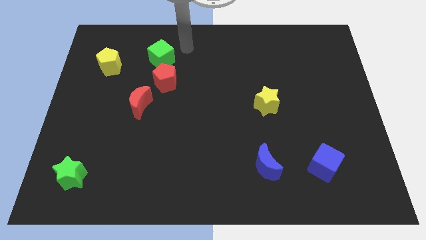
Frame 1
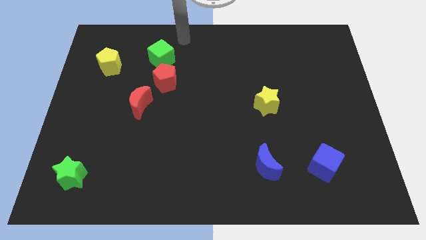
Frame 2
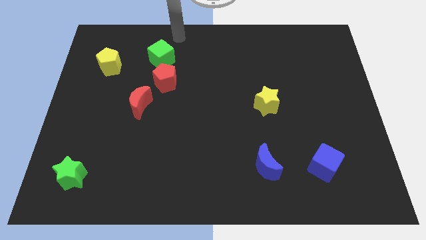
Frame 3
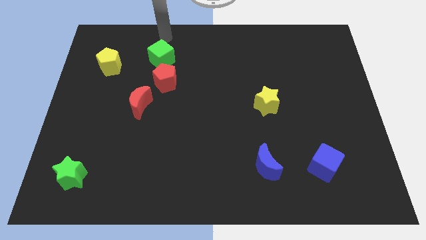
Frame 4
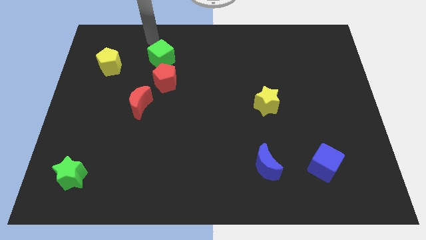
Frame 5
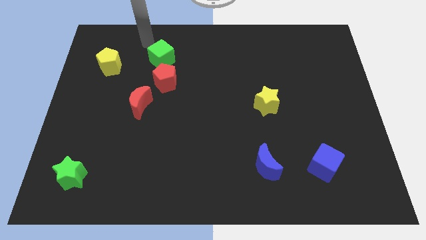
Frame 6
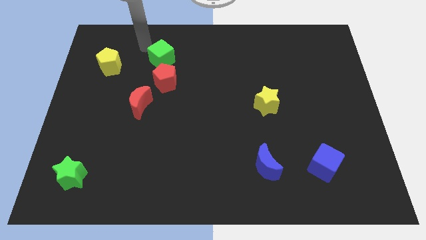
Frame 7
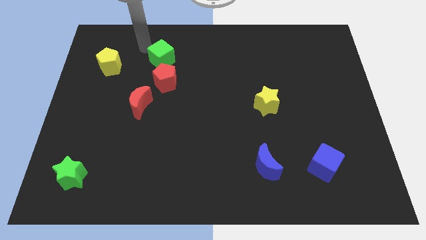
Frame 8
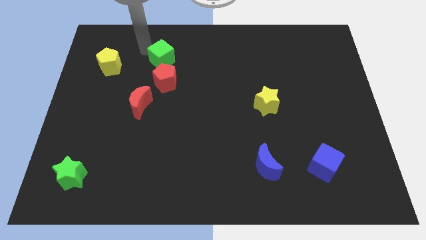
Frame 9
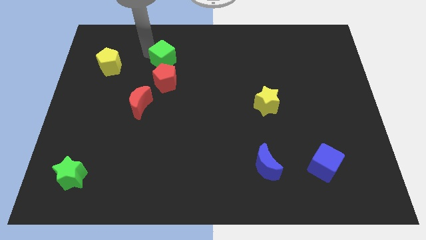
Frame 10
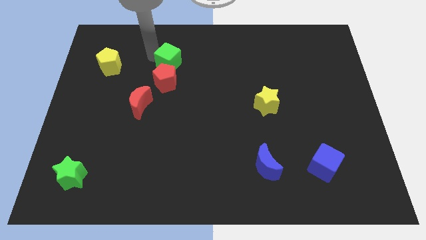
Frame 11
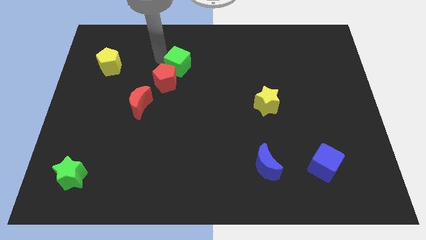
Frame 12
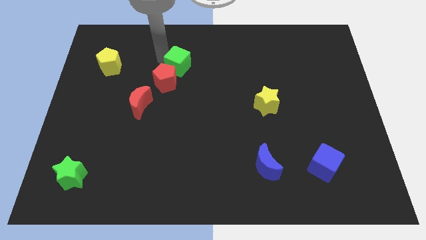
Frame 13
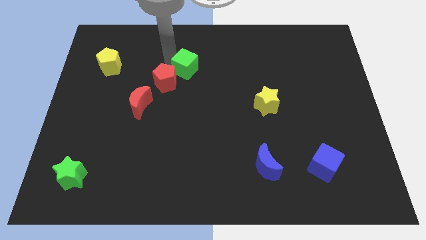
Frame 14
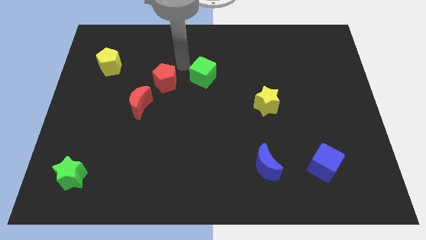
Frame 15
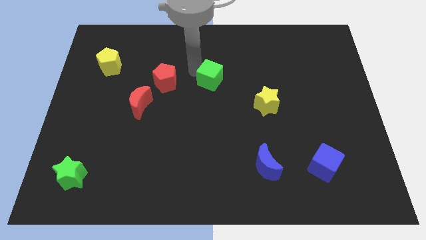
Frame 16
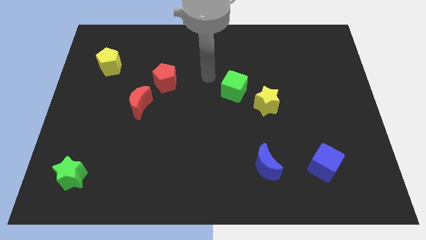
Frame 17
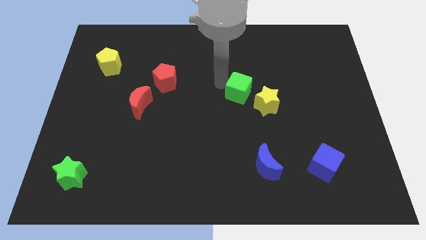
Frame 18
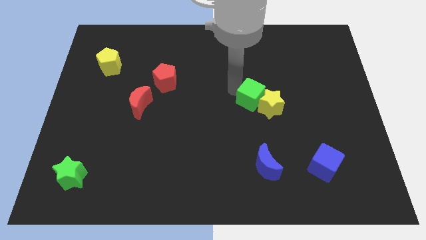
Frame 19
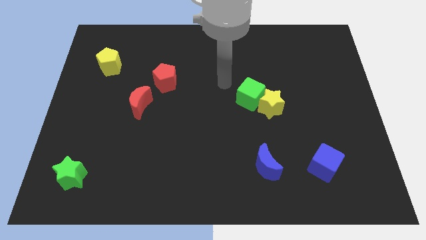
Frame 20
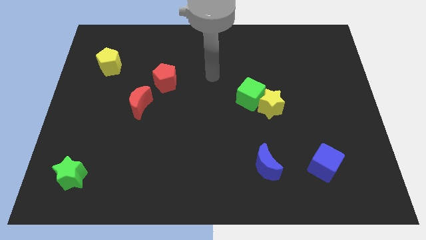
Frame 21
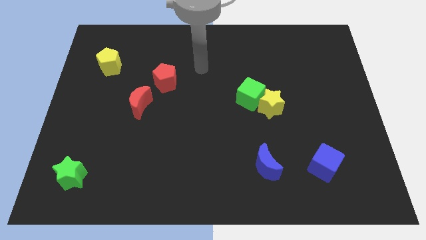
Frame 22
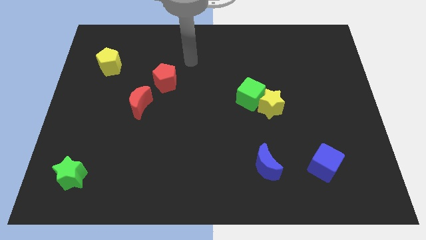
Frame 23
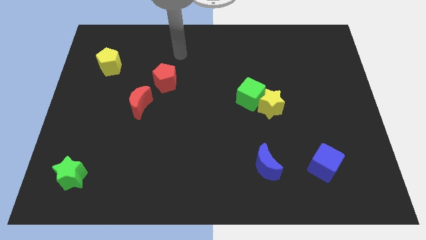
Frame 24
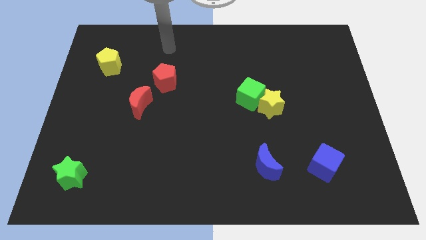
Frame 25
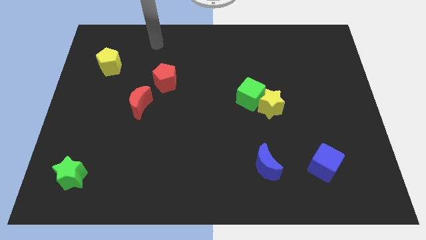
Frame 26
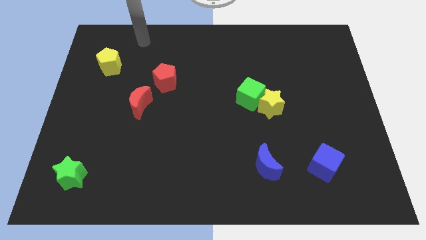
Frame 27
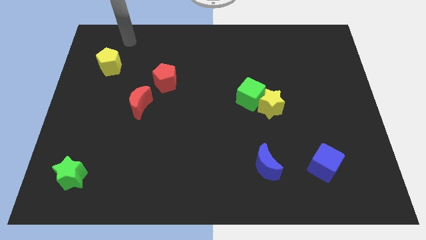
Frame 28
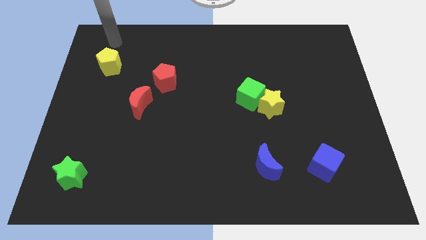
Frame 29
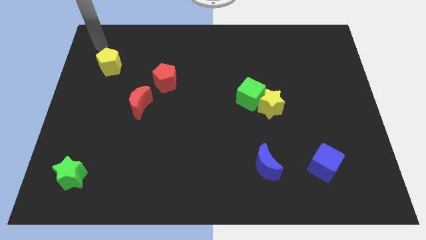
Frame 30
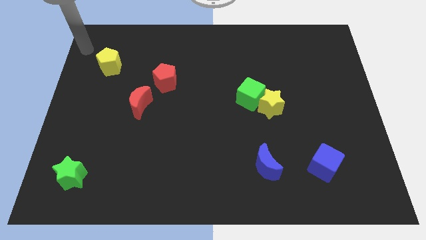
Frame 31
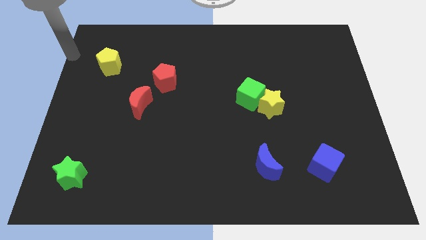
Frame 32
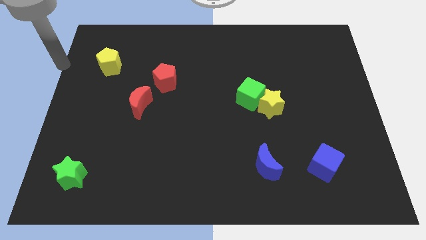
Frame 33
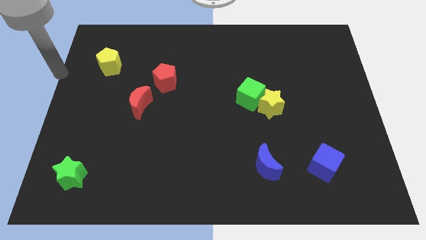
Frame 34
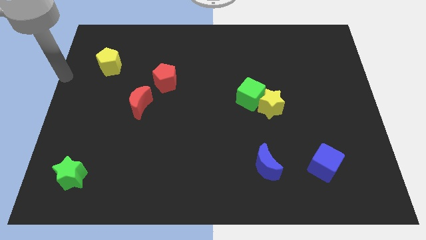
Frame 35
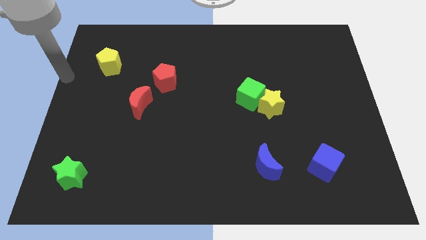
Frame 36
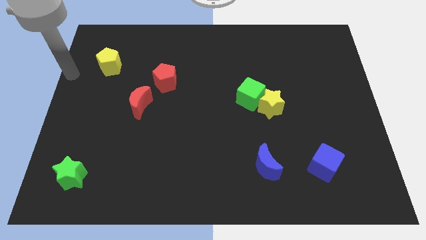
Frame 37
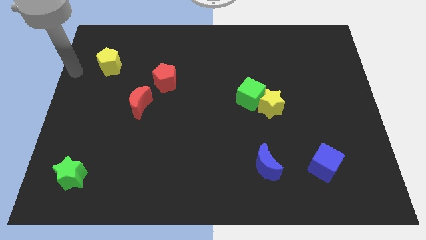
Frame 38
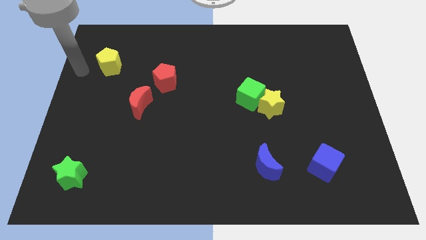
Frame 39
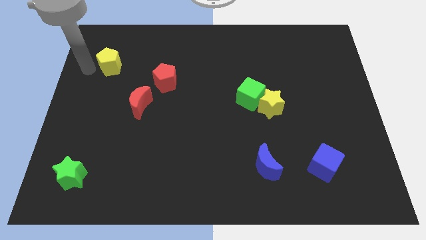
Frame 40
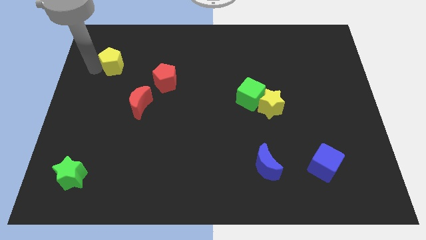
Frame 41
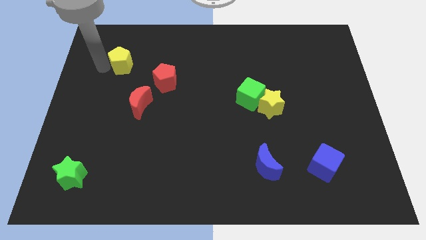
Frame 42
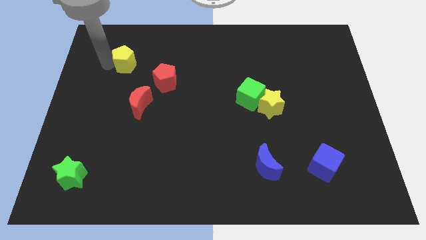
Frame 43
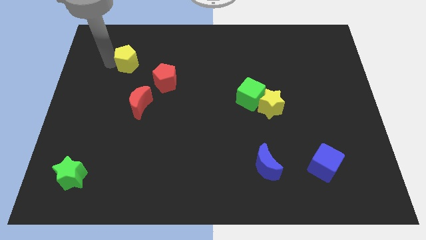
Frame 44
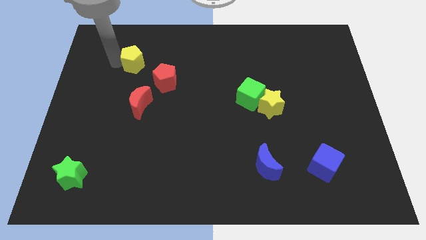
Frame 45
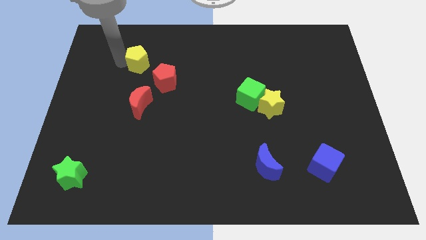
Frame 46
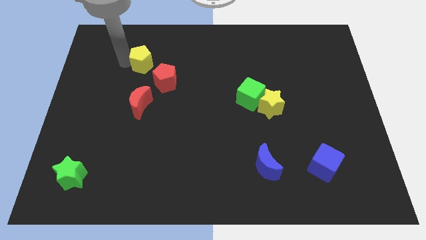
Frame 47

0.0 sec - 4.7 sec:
move the green cube close to yellow star

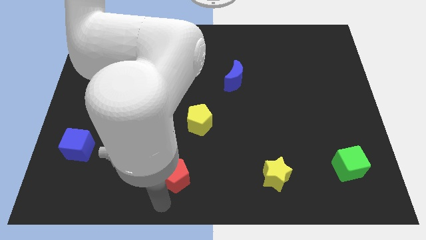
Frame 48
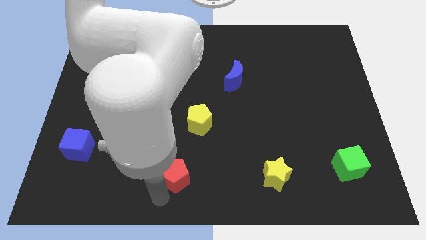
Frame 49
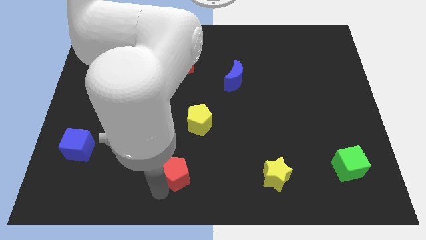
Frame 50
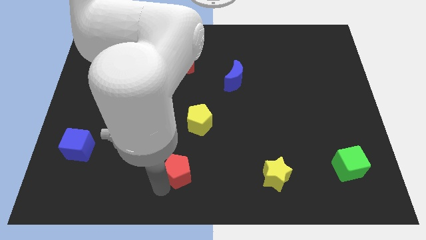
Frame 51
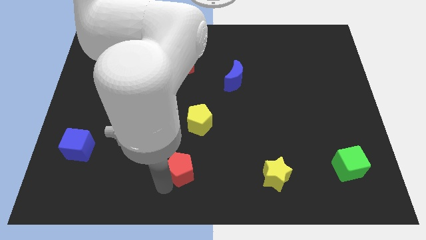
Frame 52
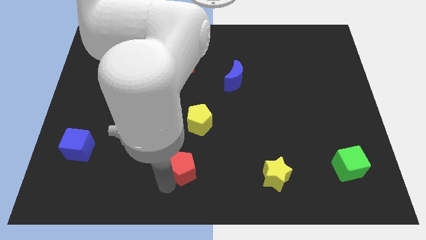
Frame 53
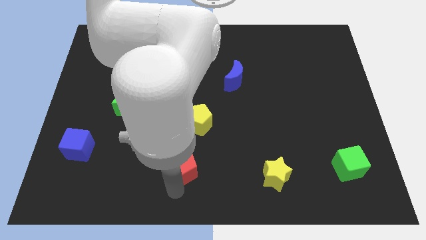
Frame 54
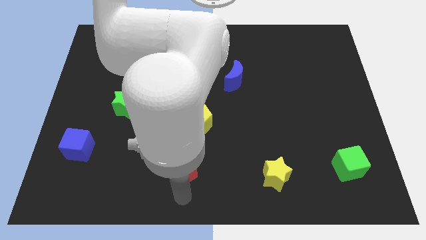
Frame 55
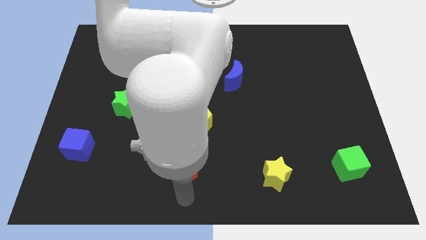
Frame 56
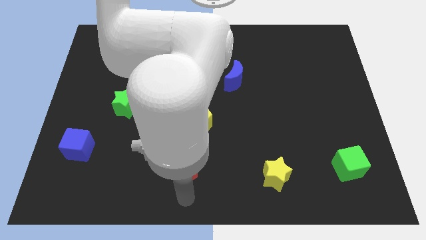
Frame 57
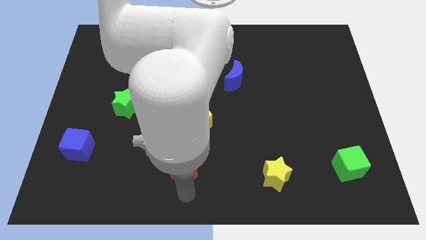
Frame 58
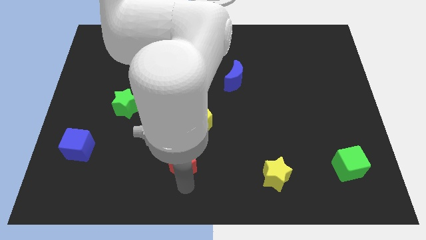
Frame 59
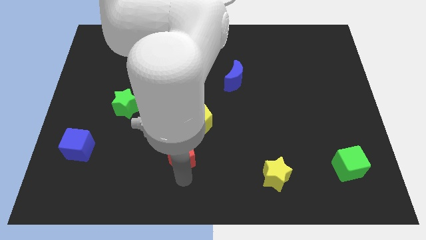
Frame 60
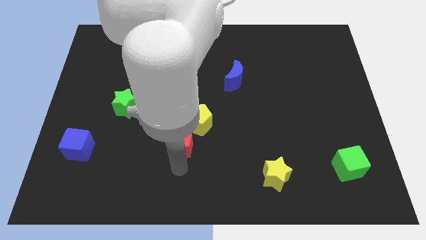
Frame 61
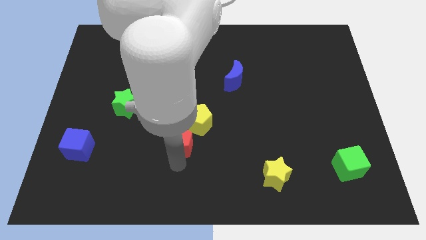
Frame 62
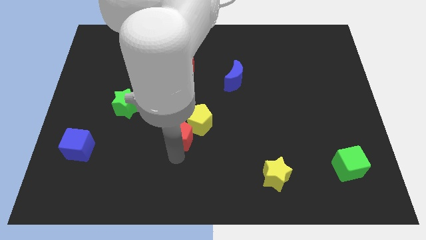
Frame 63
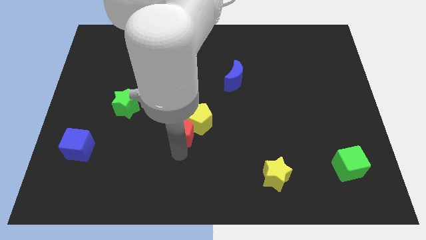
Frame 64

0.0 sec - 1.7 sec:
push the red pentagon diagonally below the yellow pentagon

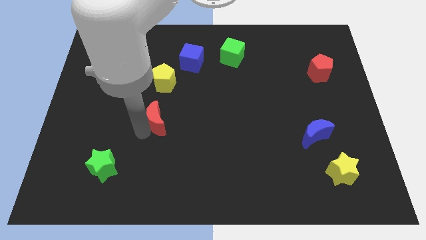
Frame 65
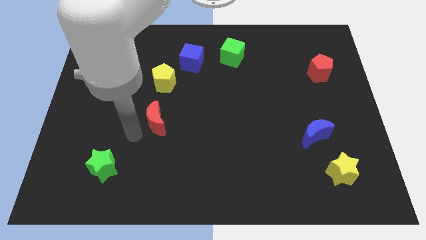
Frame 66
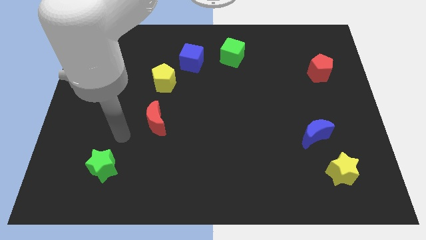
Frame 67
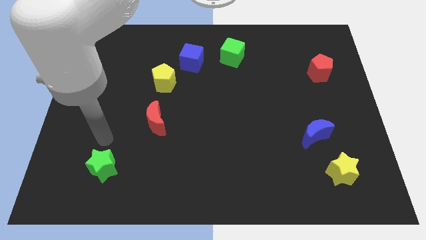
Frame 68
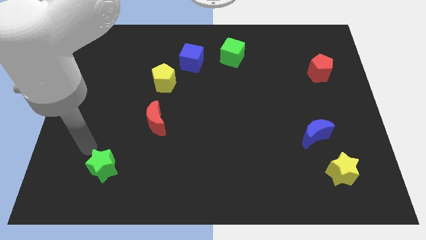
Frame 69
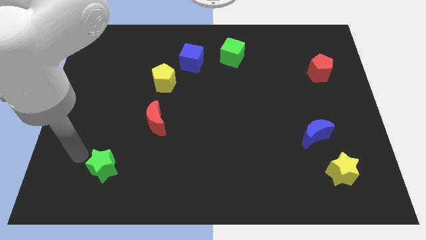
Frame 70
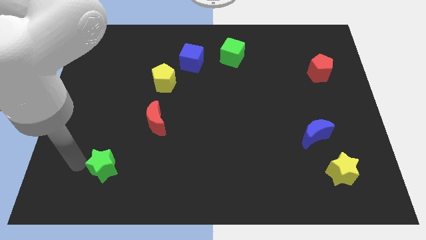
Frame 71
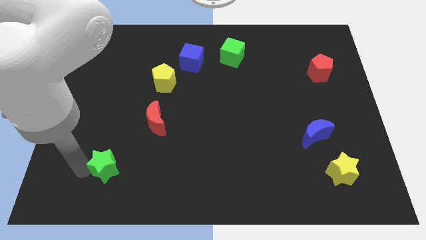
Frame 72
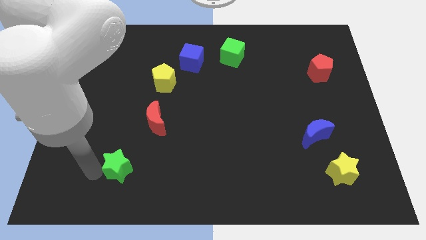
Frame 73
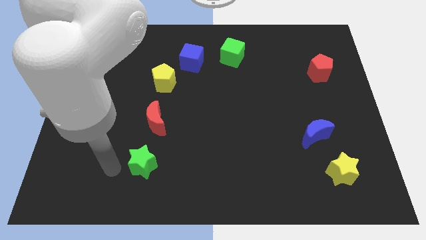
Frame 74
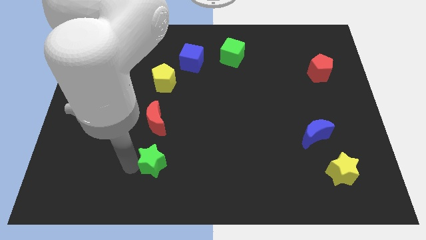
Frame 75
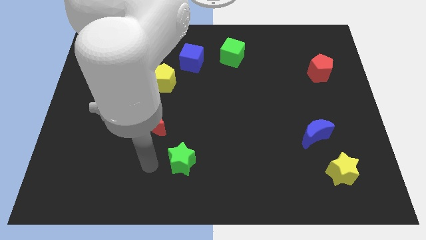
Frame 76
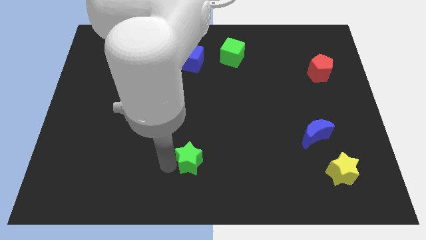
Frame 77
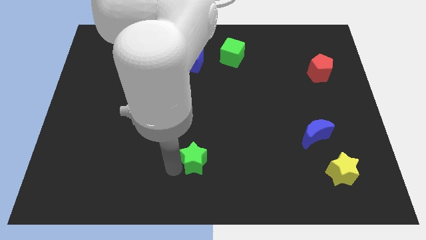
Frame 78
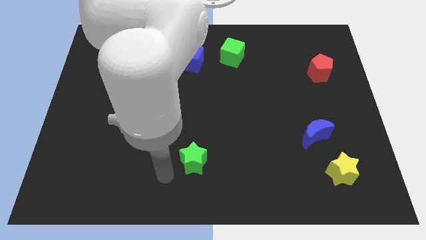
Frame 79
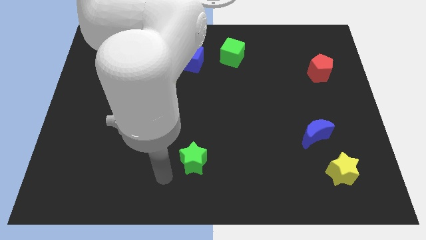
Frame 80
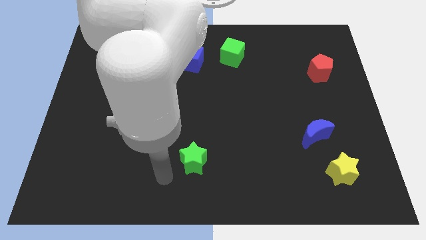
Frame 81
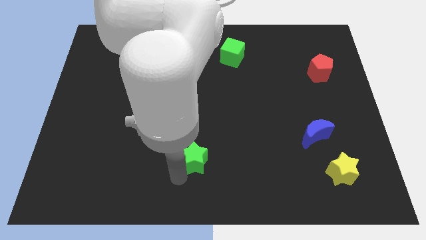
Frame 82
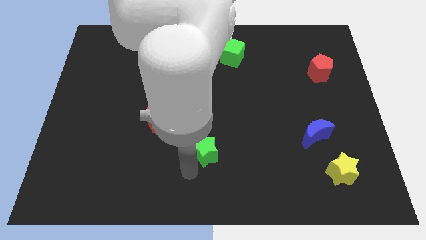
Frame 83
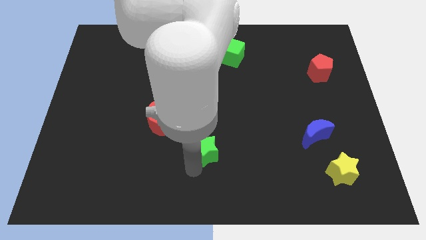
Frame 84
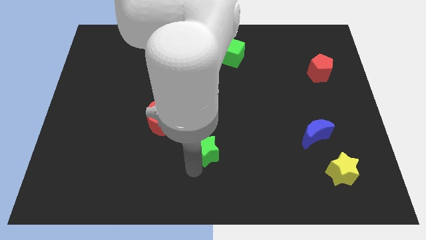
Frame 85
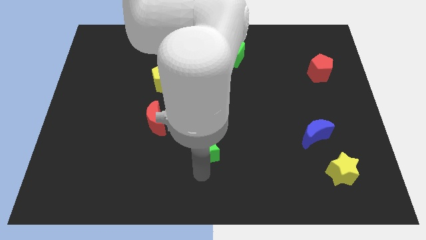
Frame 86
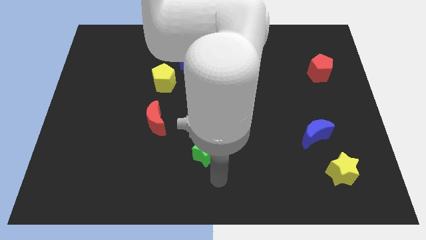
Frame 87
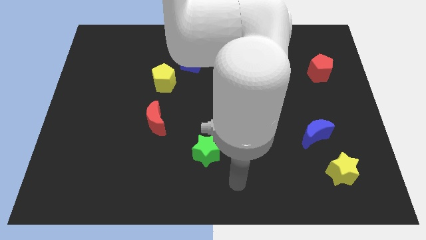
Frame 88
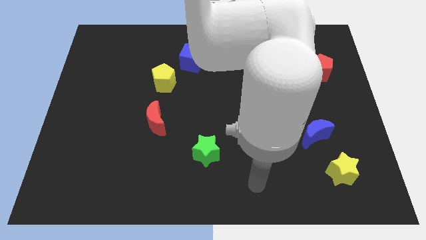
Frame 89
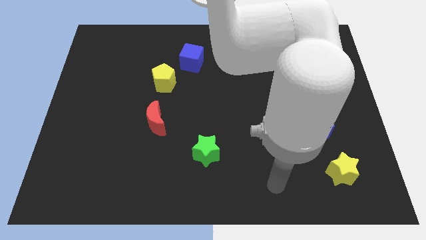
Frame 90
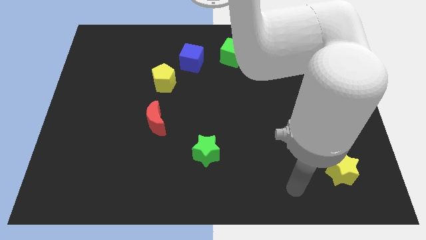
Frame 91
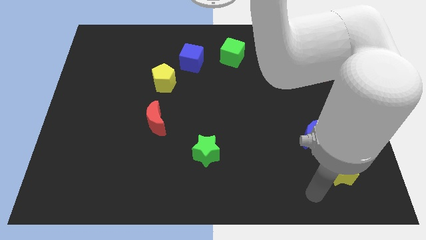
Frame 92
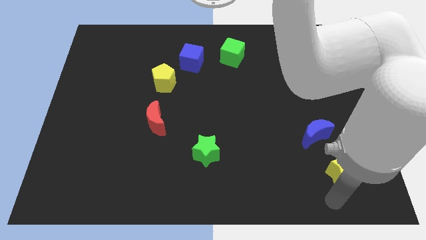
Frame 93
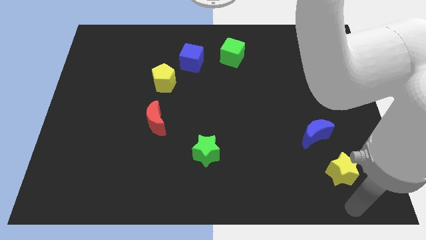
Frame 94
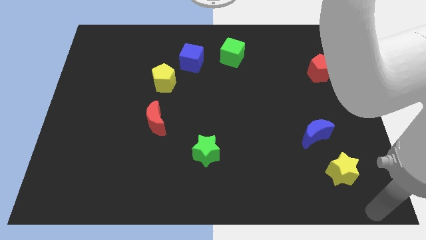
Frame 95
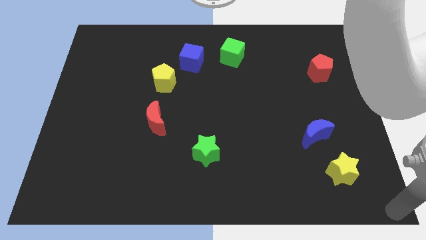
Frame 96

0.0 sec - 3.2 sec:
move the green star diagonally below the bottom right side of the red crescent
